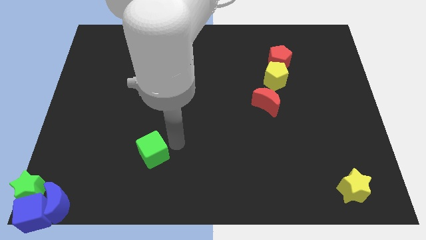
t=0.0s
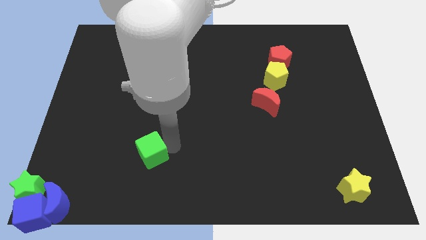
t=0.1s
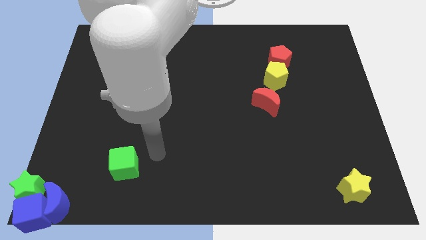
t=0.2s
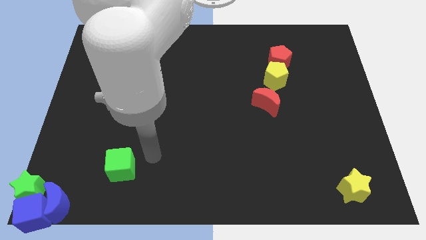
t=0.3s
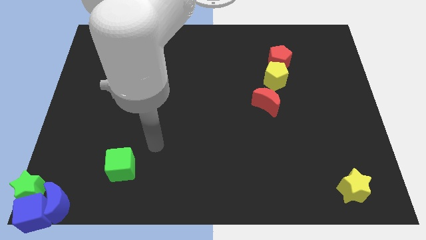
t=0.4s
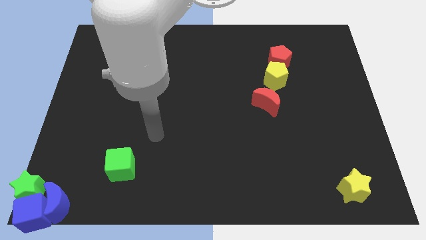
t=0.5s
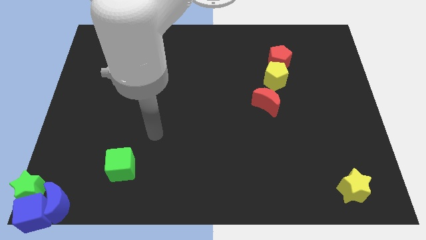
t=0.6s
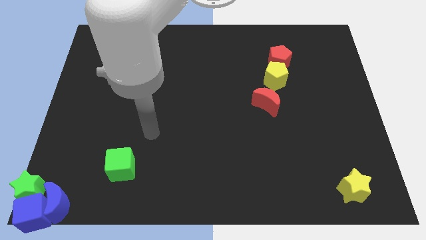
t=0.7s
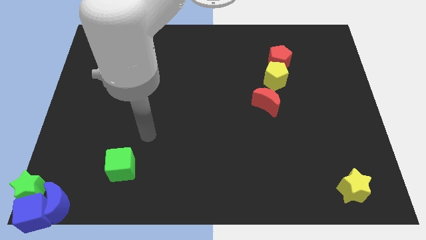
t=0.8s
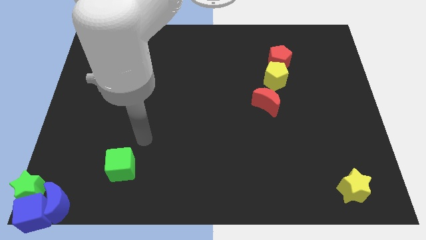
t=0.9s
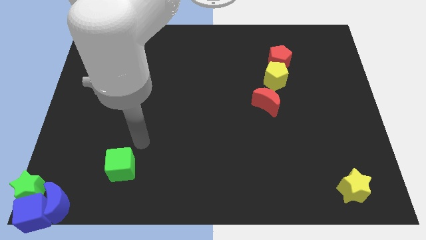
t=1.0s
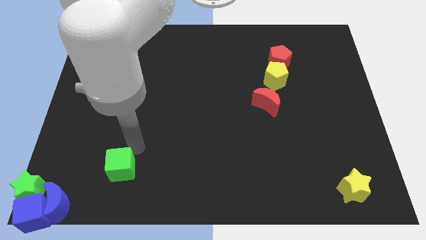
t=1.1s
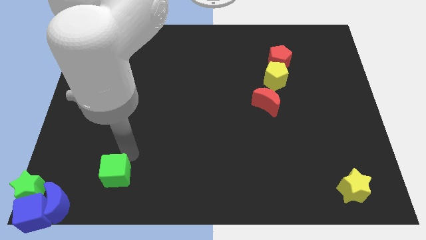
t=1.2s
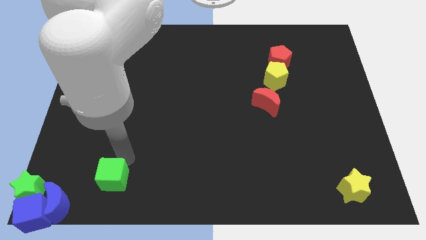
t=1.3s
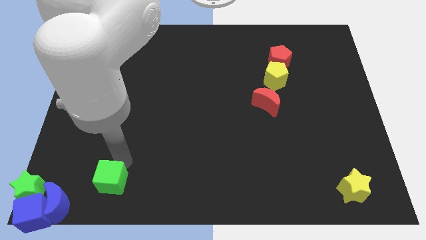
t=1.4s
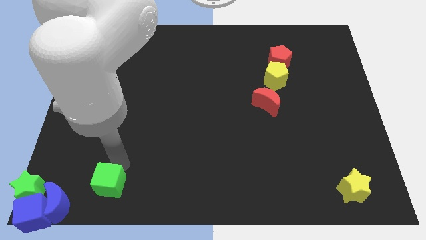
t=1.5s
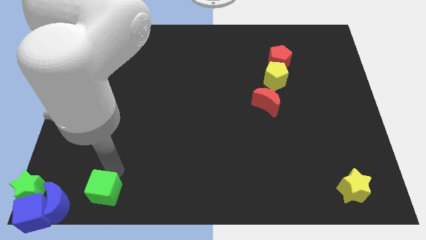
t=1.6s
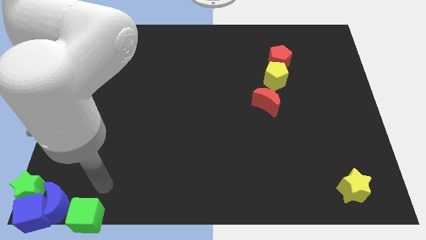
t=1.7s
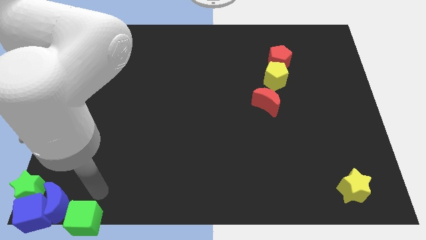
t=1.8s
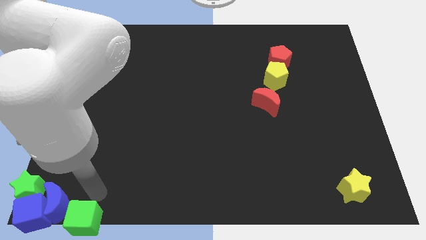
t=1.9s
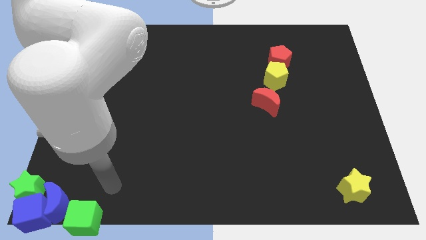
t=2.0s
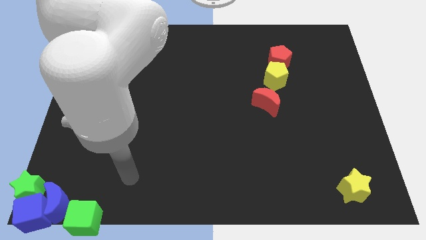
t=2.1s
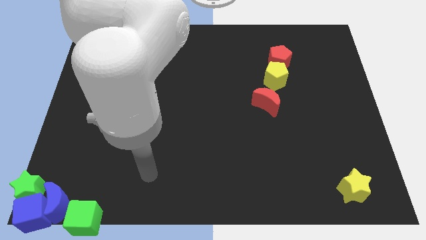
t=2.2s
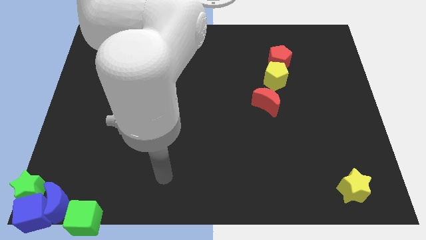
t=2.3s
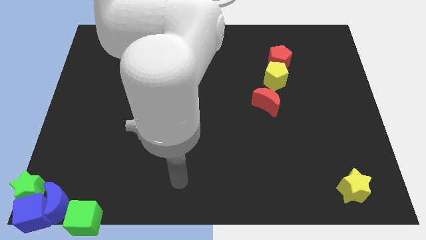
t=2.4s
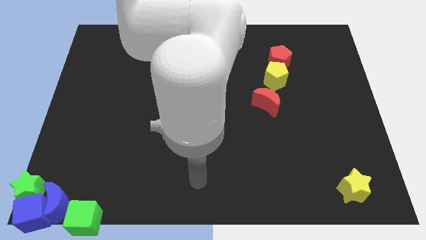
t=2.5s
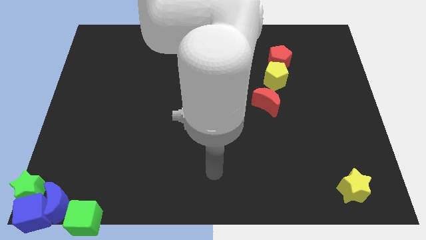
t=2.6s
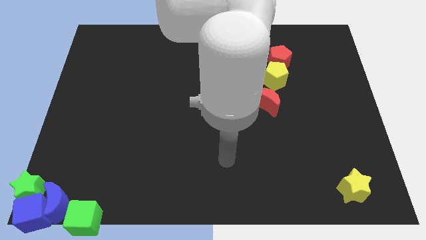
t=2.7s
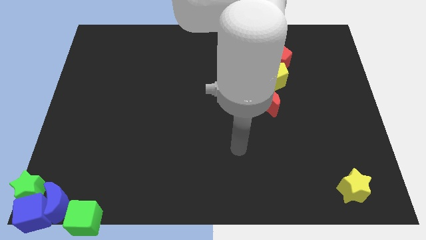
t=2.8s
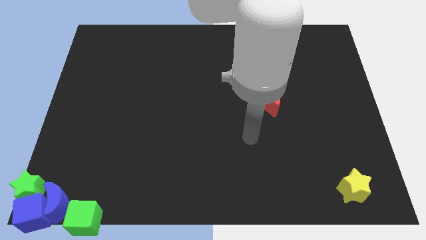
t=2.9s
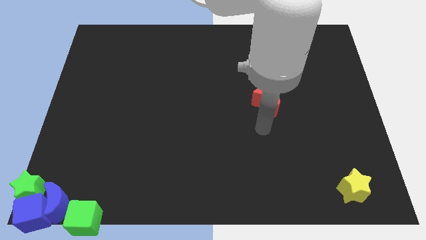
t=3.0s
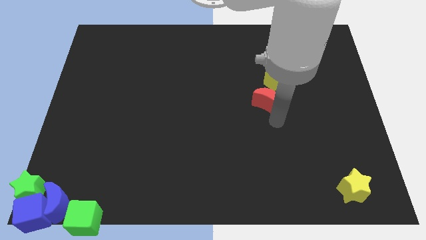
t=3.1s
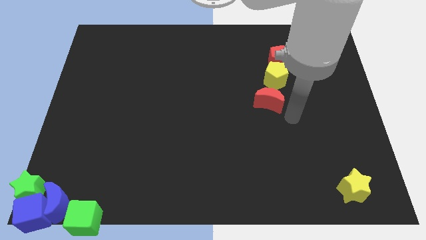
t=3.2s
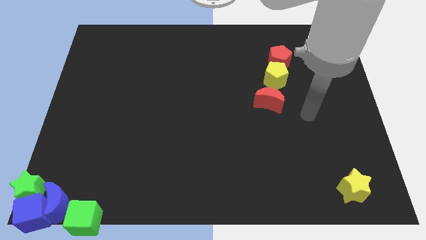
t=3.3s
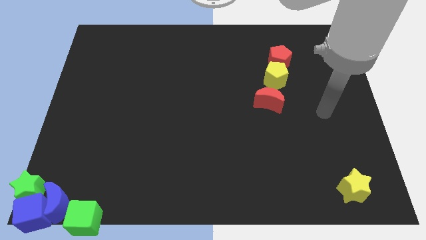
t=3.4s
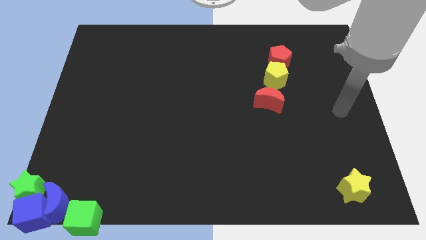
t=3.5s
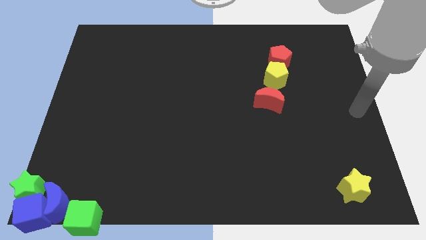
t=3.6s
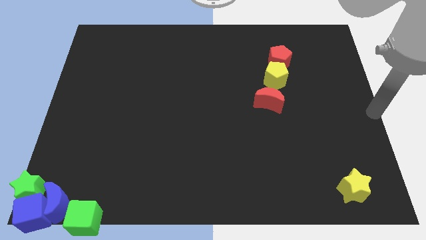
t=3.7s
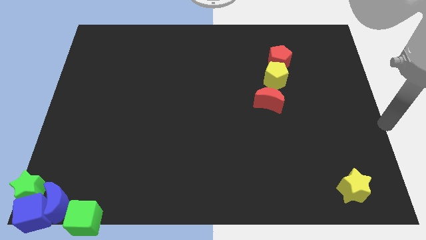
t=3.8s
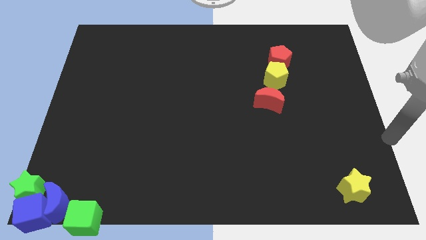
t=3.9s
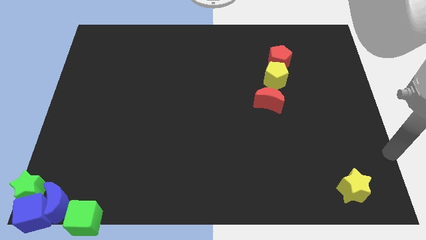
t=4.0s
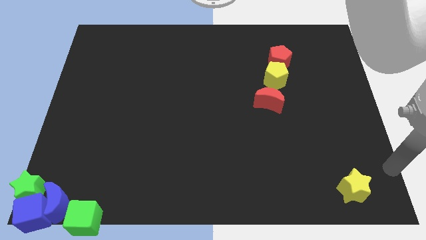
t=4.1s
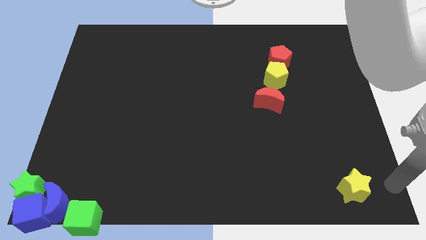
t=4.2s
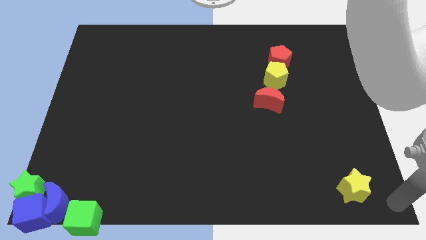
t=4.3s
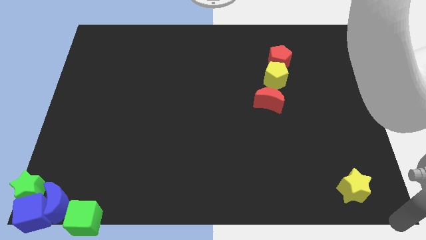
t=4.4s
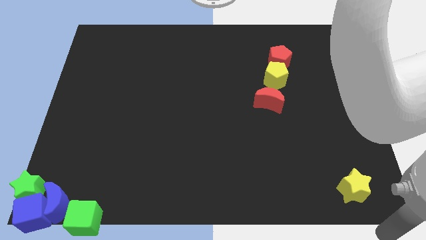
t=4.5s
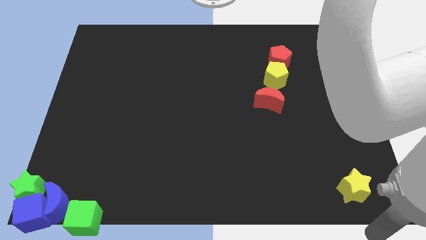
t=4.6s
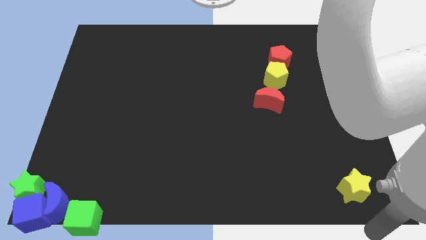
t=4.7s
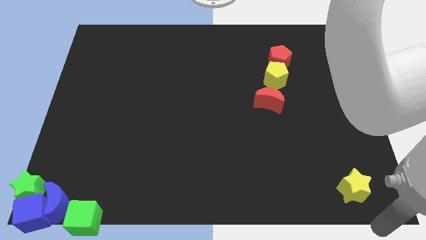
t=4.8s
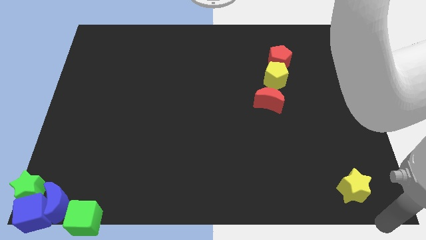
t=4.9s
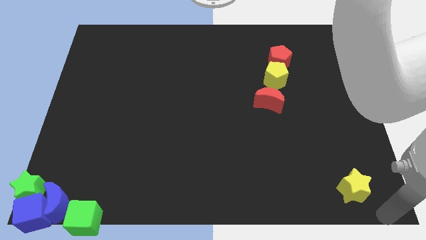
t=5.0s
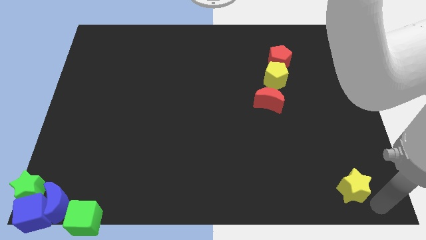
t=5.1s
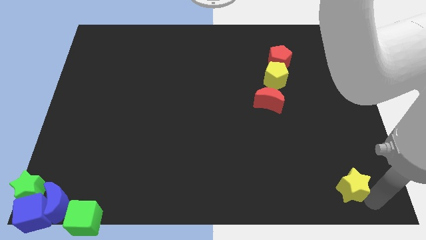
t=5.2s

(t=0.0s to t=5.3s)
place your hand to the bottom right of the yellow star

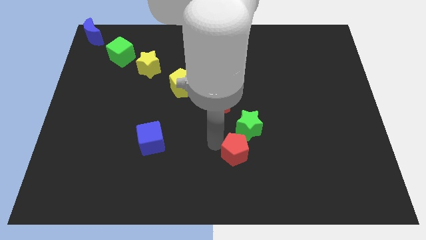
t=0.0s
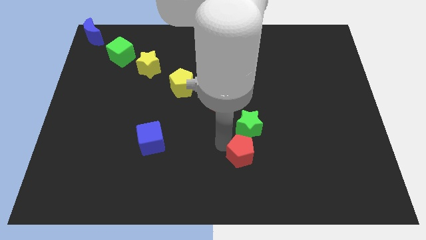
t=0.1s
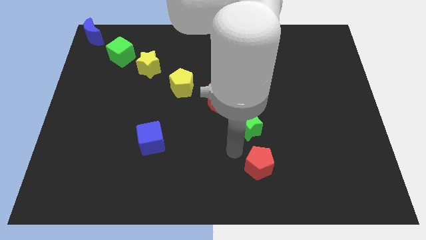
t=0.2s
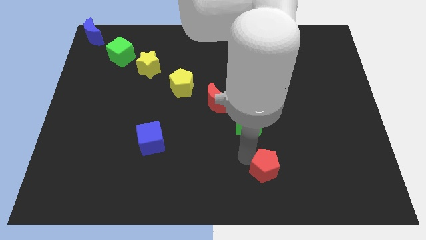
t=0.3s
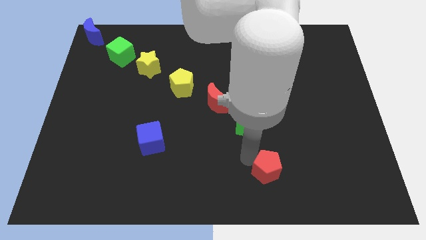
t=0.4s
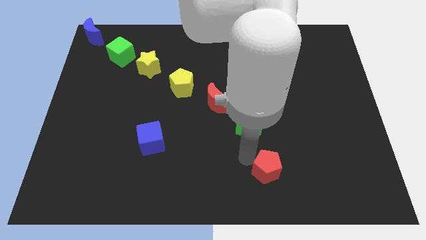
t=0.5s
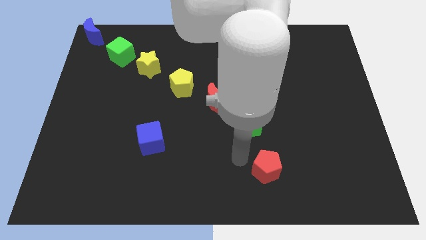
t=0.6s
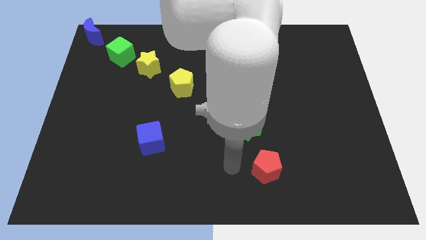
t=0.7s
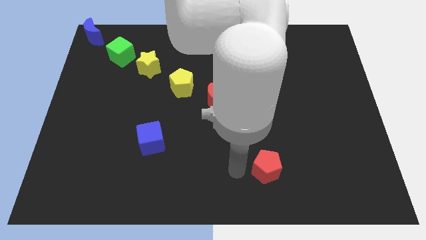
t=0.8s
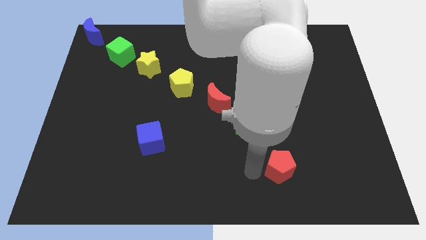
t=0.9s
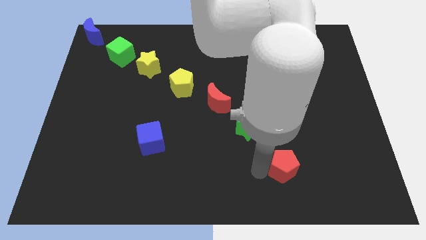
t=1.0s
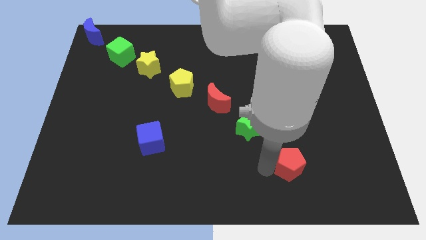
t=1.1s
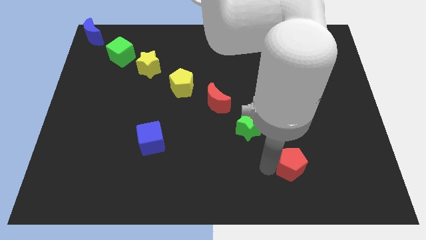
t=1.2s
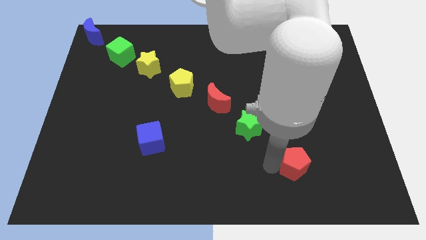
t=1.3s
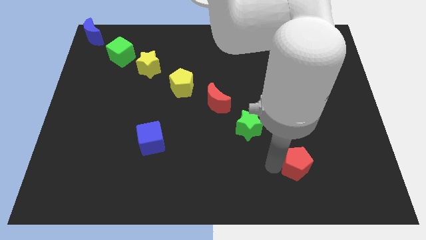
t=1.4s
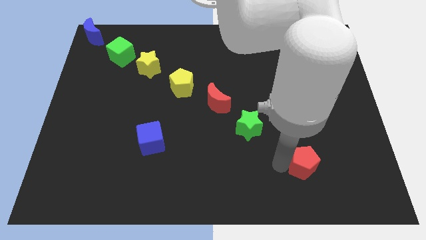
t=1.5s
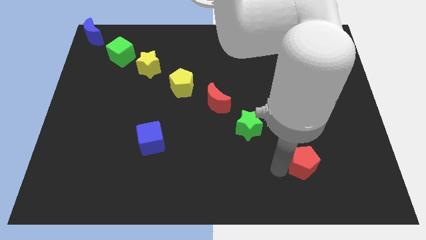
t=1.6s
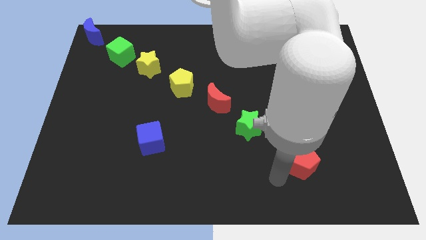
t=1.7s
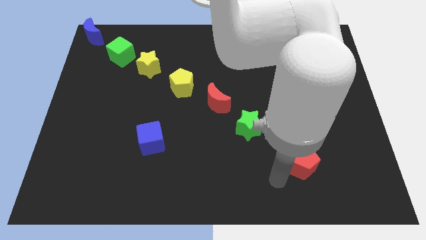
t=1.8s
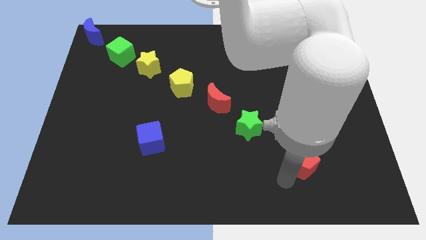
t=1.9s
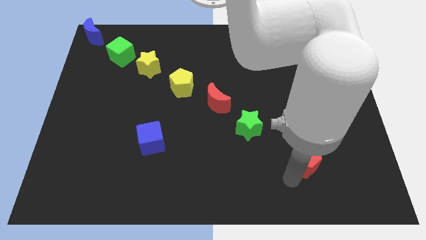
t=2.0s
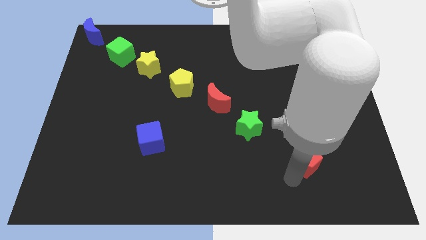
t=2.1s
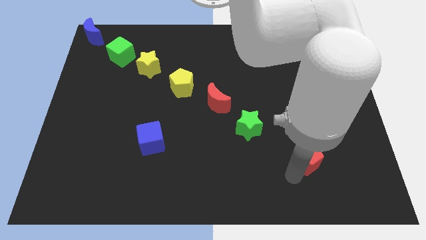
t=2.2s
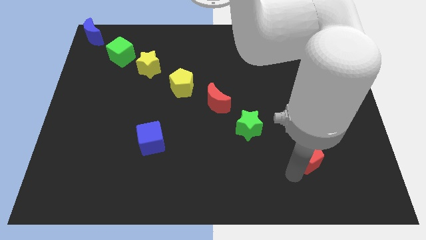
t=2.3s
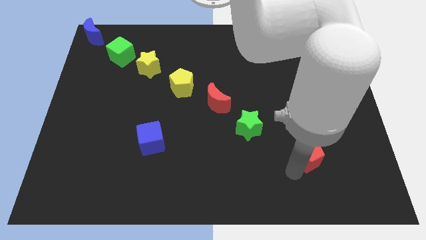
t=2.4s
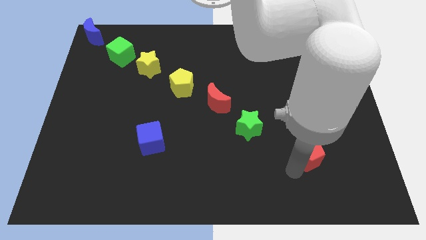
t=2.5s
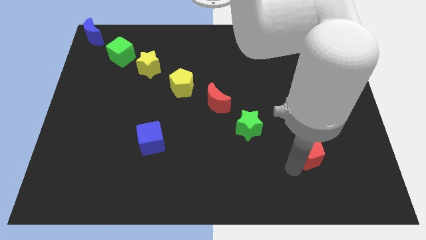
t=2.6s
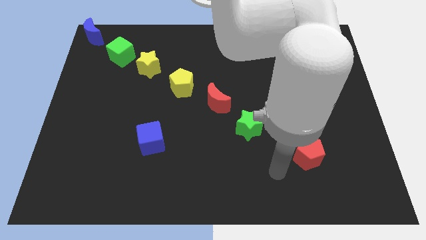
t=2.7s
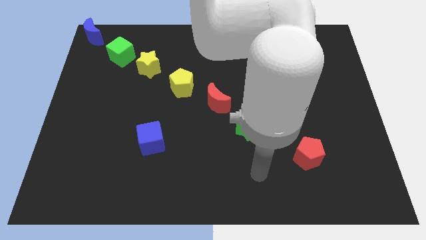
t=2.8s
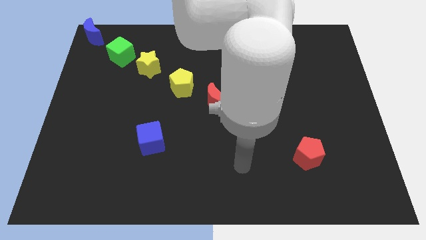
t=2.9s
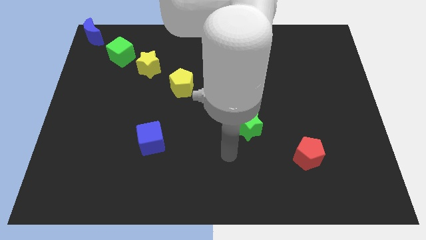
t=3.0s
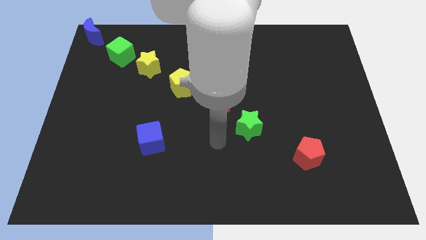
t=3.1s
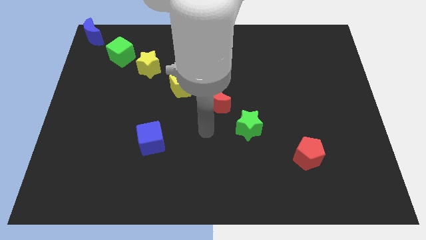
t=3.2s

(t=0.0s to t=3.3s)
place the red pentagon to the bottom right side of the green star

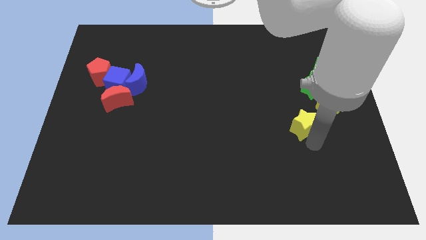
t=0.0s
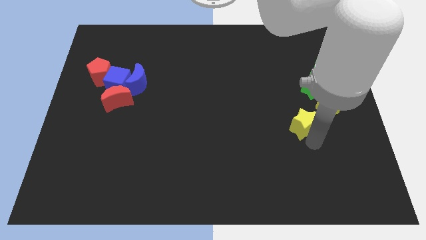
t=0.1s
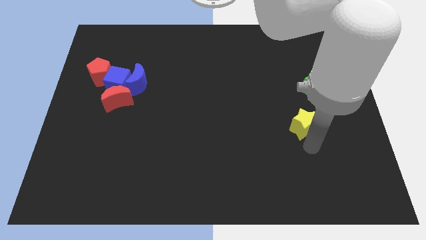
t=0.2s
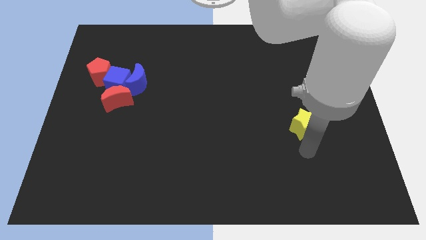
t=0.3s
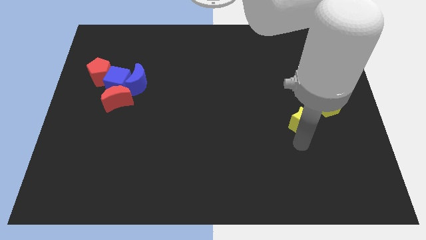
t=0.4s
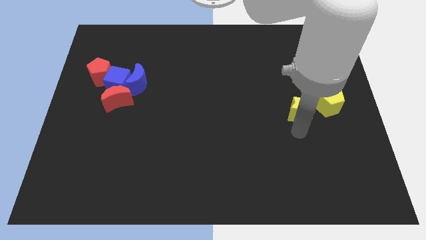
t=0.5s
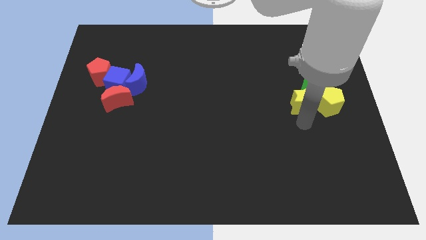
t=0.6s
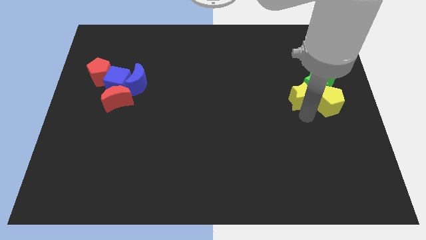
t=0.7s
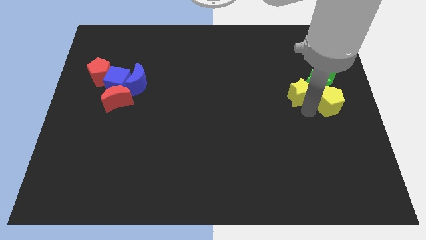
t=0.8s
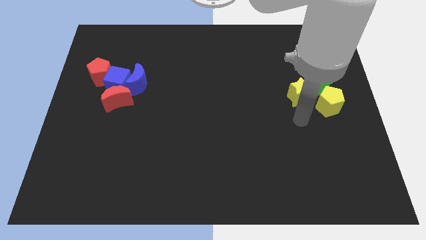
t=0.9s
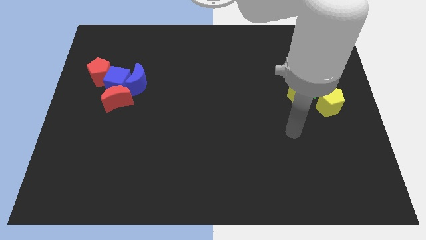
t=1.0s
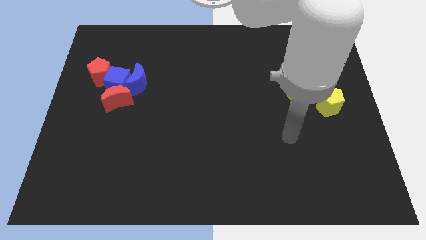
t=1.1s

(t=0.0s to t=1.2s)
put the yellow star into the green star
